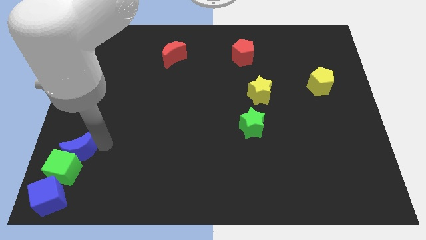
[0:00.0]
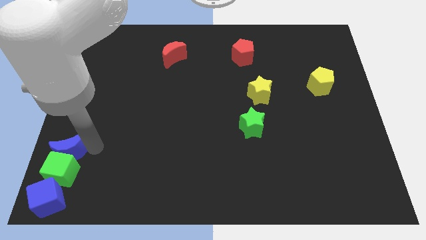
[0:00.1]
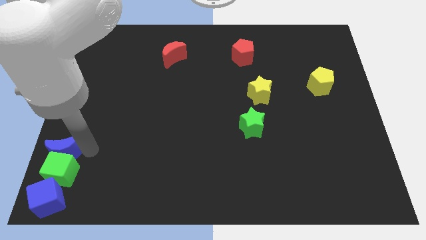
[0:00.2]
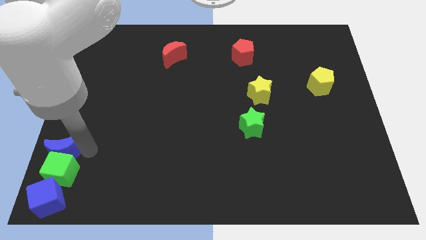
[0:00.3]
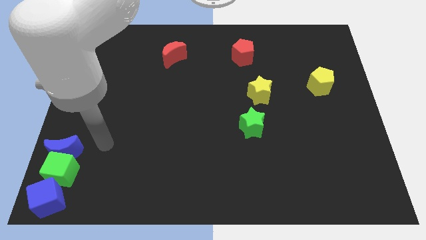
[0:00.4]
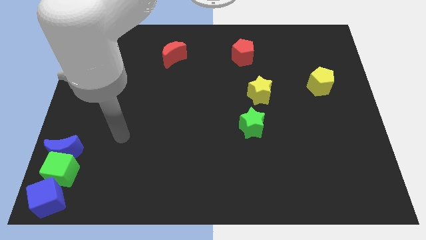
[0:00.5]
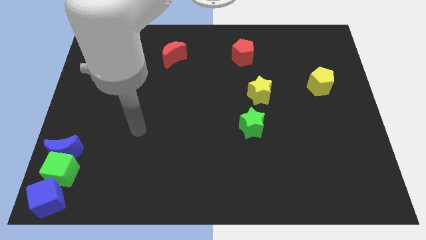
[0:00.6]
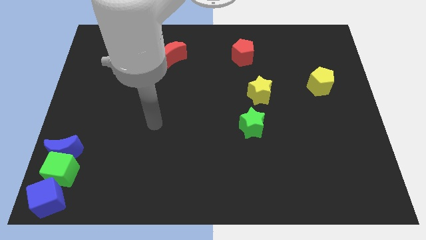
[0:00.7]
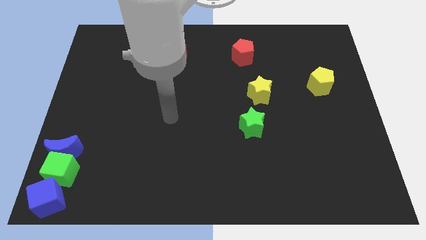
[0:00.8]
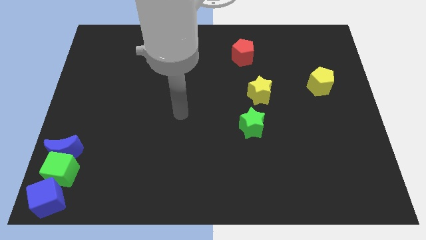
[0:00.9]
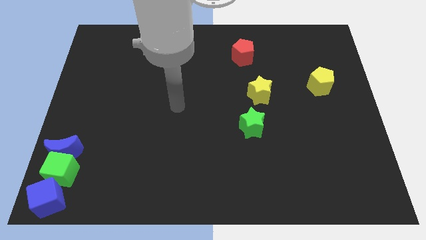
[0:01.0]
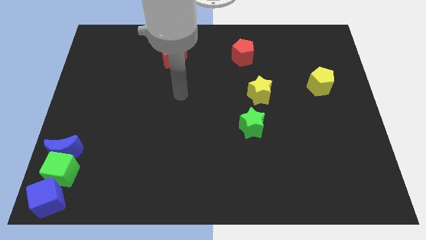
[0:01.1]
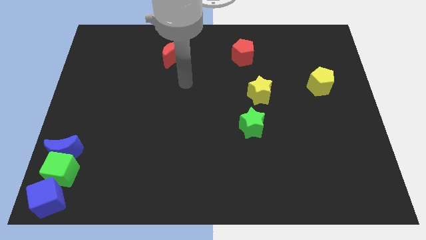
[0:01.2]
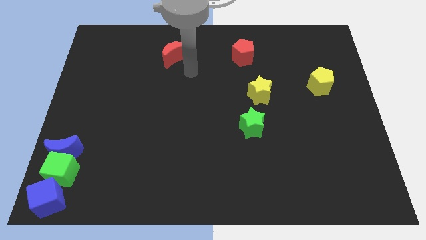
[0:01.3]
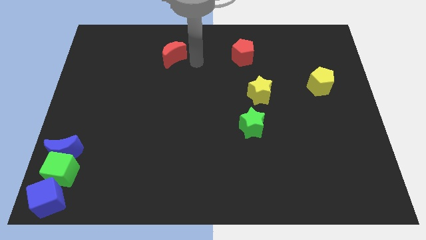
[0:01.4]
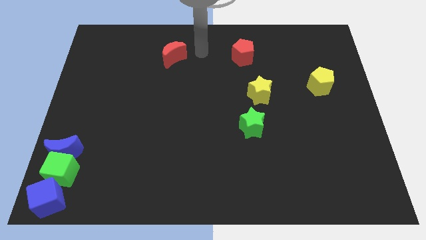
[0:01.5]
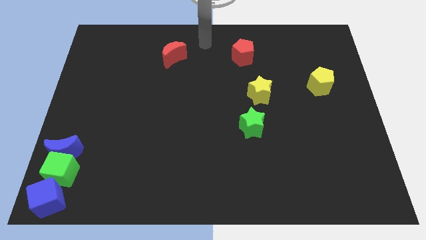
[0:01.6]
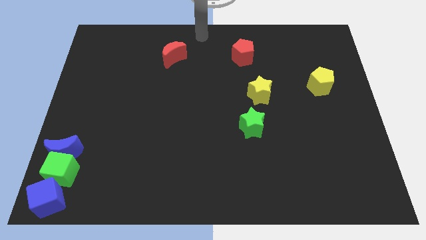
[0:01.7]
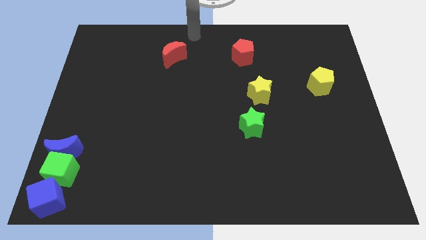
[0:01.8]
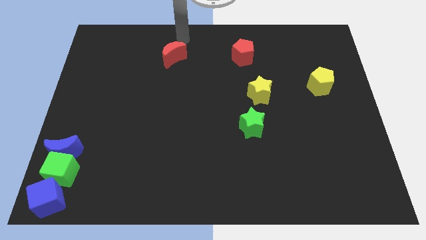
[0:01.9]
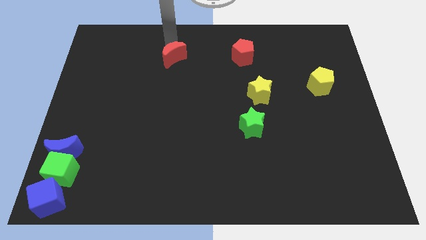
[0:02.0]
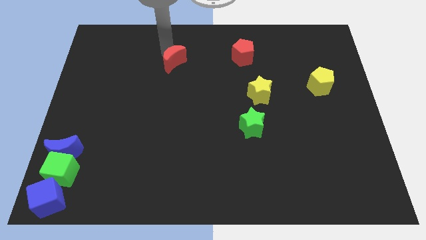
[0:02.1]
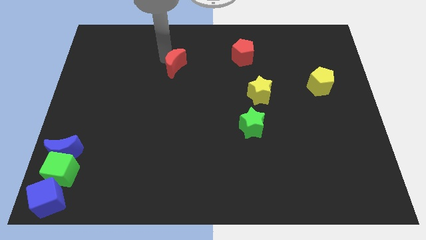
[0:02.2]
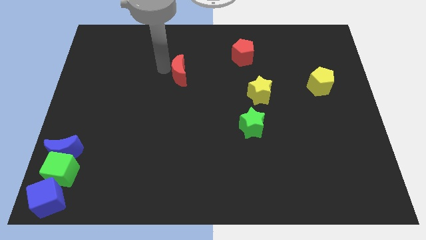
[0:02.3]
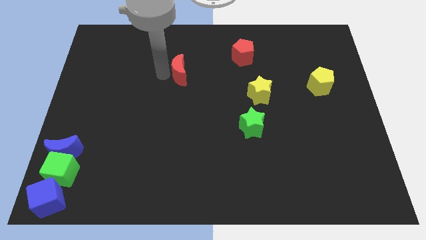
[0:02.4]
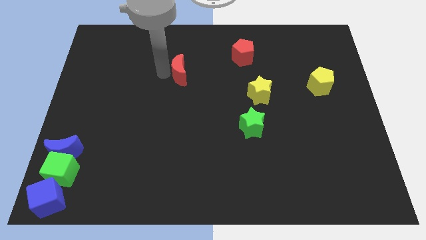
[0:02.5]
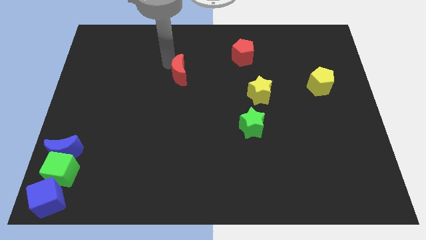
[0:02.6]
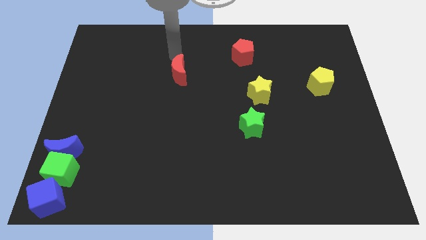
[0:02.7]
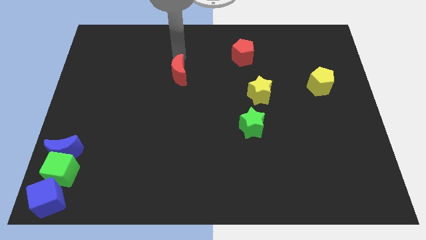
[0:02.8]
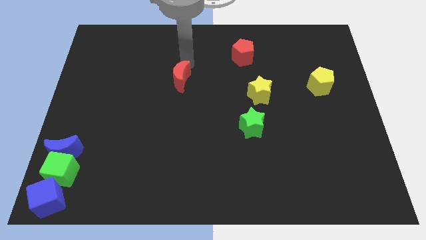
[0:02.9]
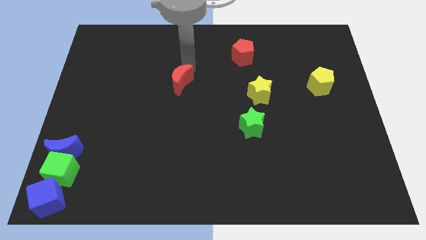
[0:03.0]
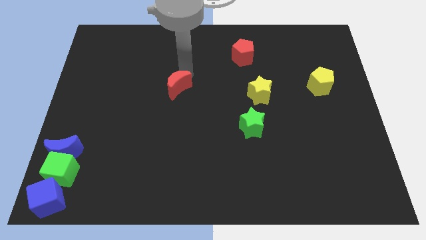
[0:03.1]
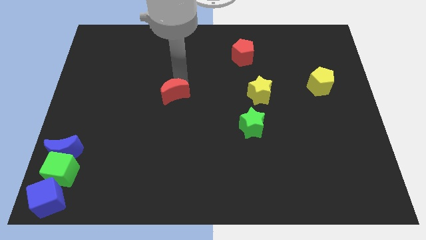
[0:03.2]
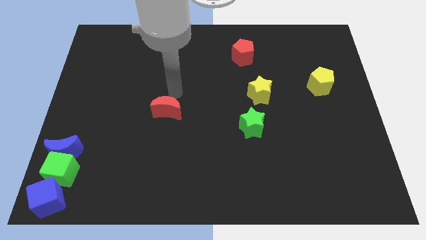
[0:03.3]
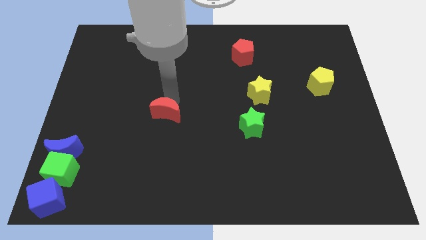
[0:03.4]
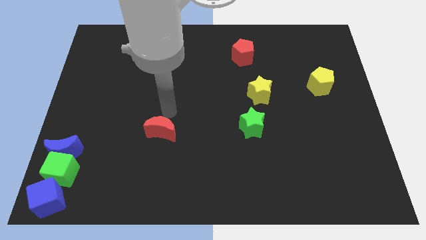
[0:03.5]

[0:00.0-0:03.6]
drag red moon parallel to the green star

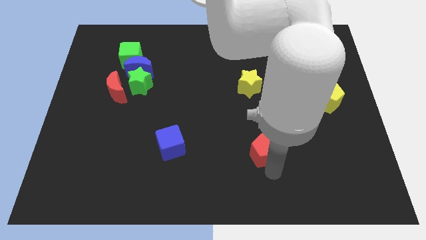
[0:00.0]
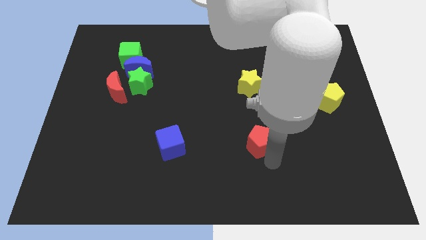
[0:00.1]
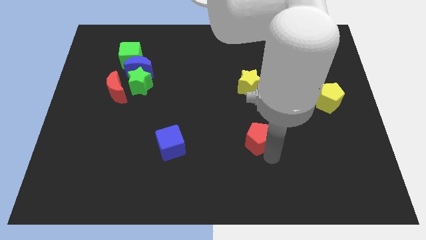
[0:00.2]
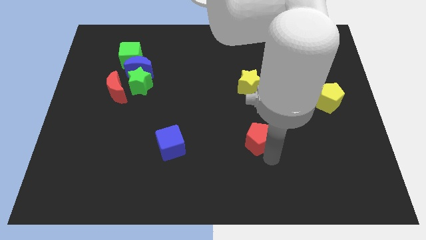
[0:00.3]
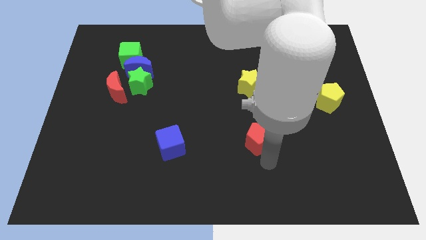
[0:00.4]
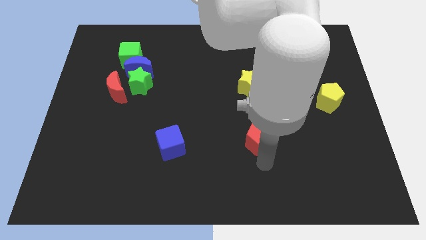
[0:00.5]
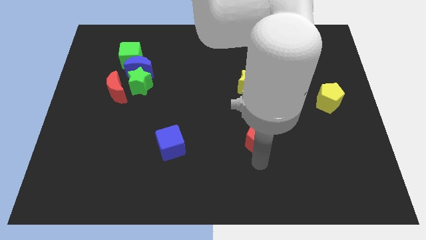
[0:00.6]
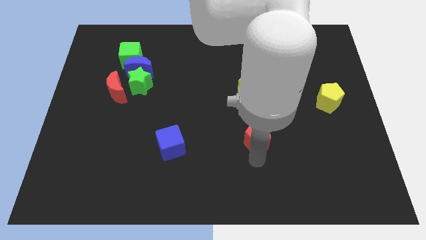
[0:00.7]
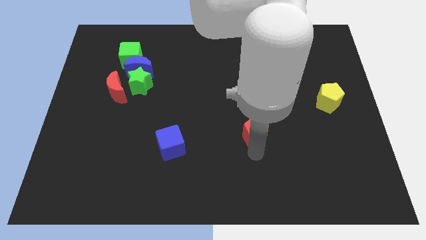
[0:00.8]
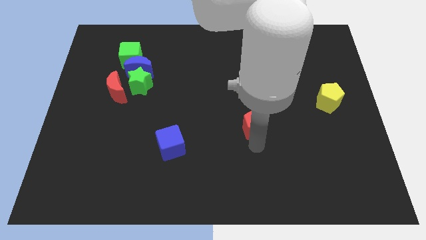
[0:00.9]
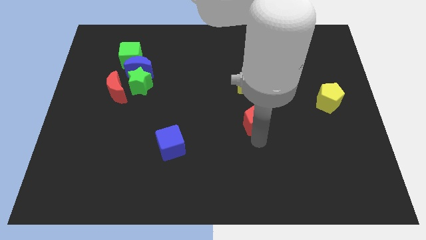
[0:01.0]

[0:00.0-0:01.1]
place the red pentagon in between the yellow pentagon and blue cube

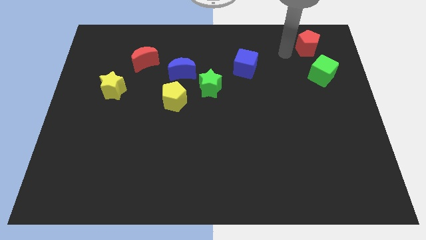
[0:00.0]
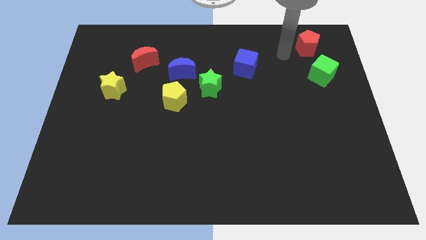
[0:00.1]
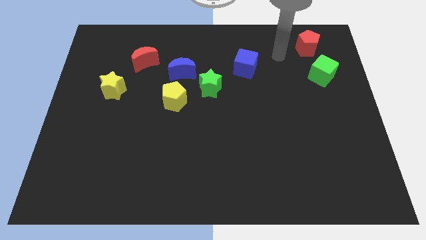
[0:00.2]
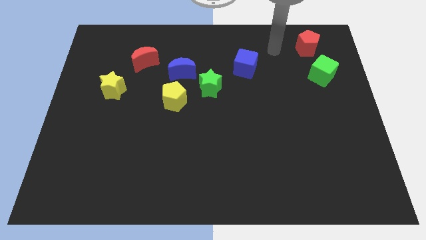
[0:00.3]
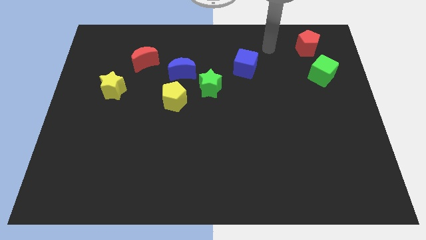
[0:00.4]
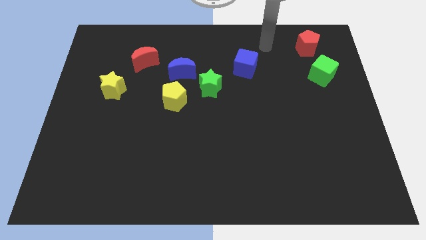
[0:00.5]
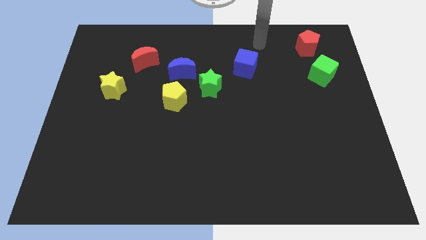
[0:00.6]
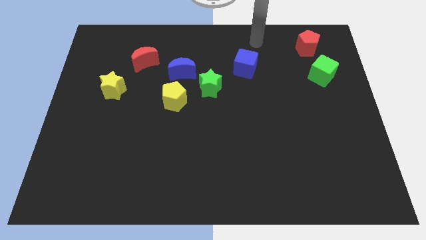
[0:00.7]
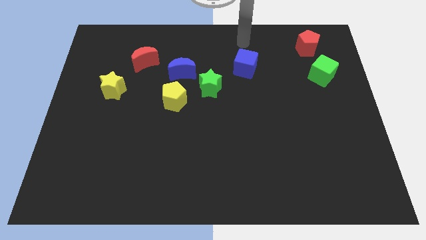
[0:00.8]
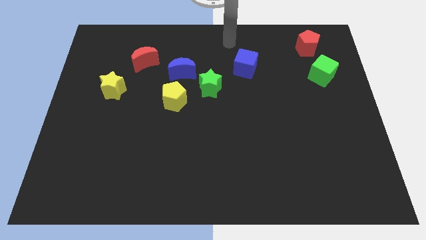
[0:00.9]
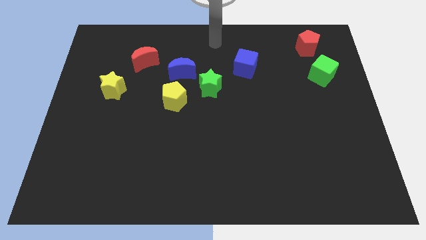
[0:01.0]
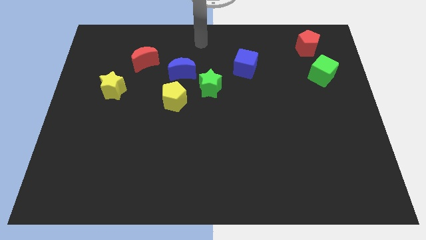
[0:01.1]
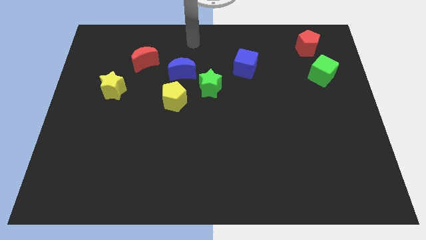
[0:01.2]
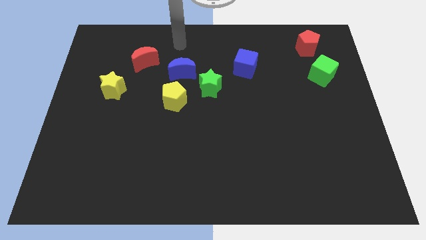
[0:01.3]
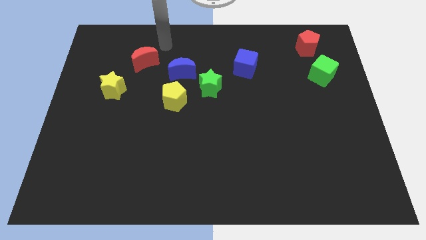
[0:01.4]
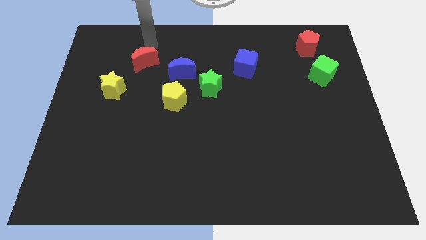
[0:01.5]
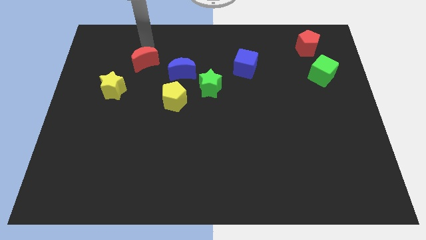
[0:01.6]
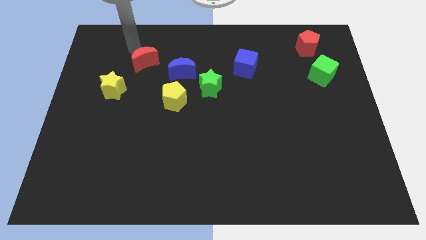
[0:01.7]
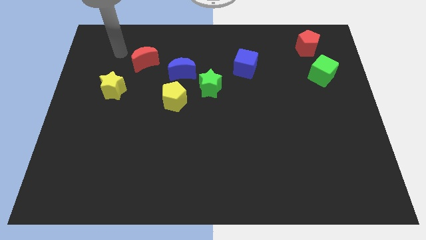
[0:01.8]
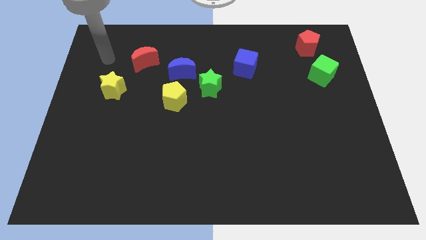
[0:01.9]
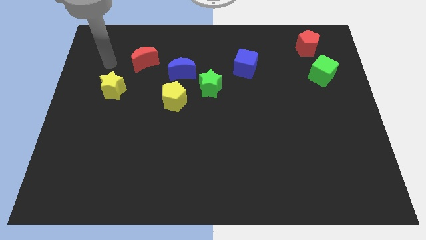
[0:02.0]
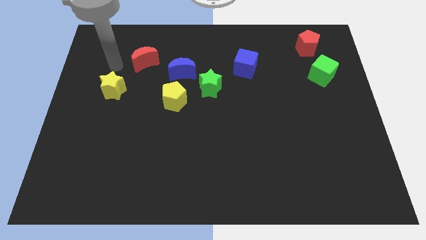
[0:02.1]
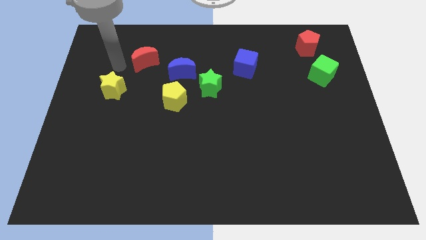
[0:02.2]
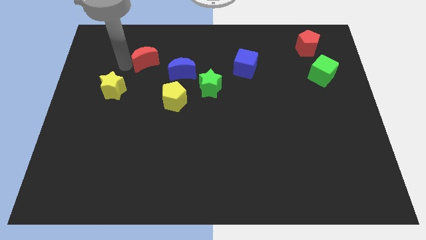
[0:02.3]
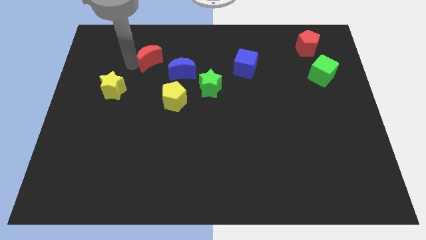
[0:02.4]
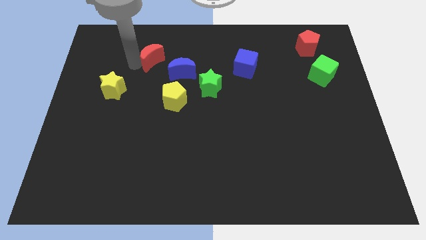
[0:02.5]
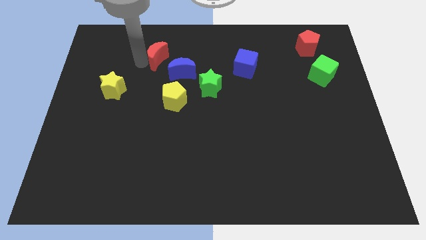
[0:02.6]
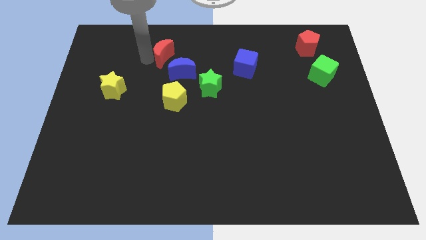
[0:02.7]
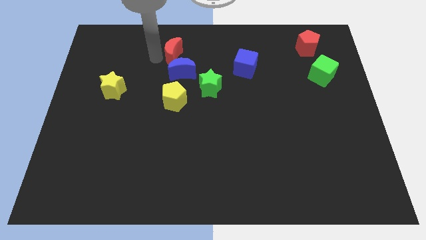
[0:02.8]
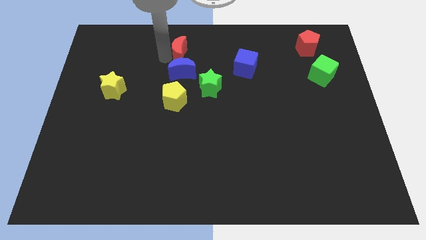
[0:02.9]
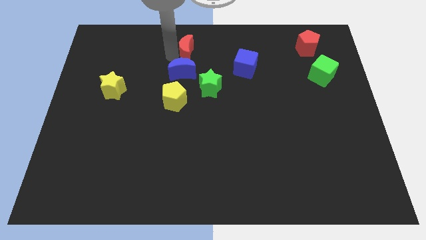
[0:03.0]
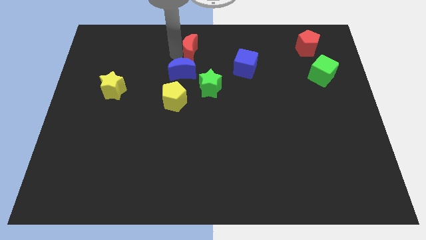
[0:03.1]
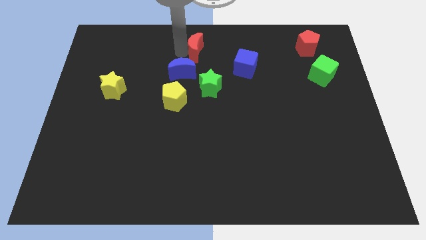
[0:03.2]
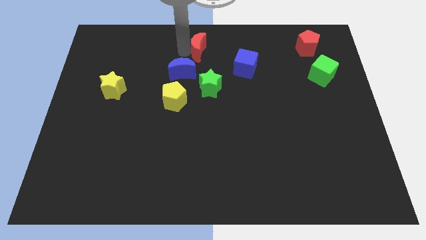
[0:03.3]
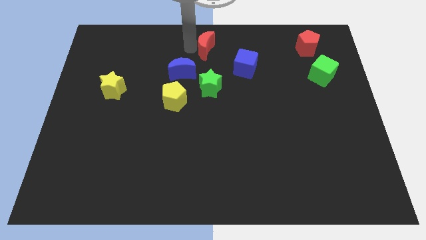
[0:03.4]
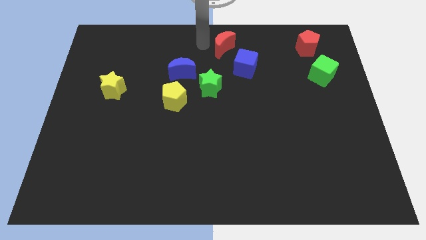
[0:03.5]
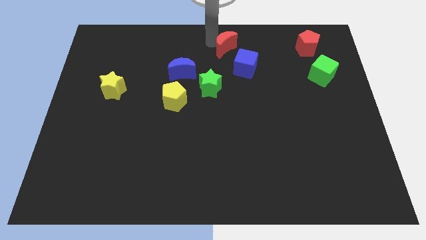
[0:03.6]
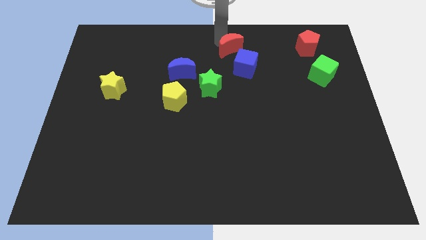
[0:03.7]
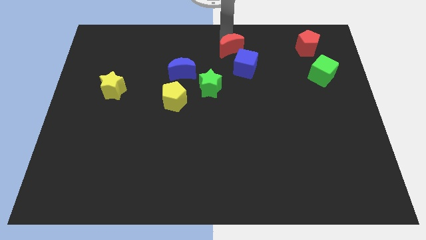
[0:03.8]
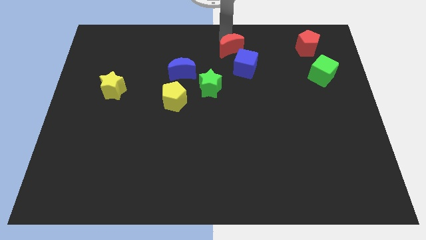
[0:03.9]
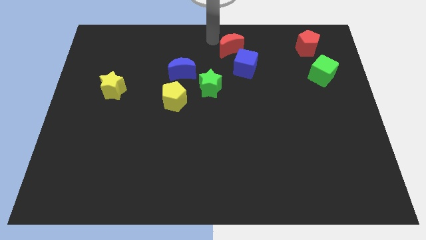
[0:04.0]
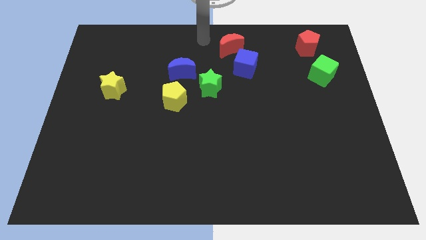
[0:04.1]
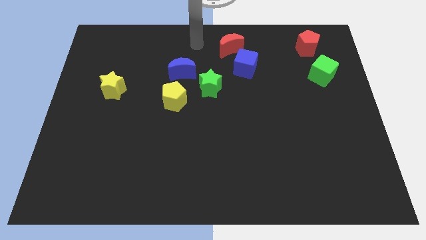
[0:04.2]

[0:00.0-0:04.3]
place the red moon above blue cube
